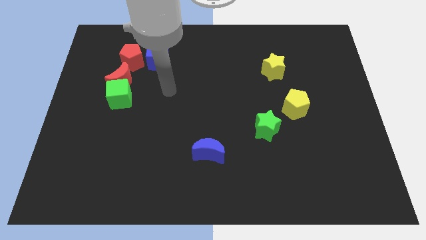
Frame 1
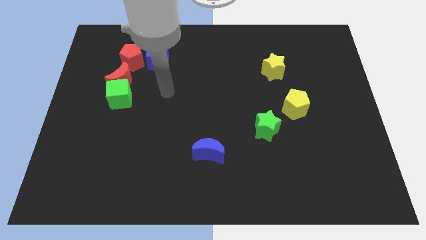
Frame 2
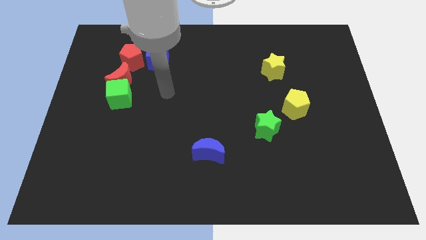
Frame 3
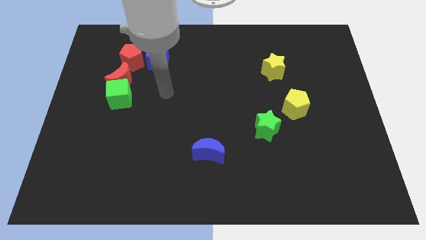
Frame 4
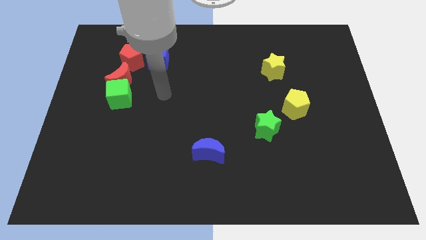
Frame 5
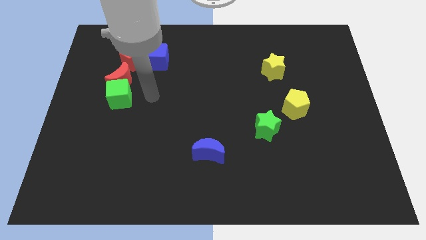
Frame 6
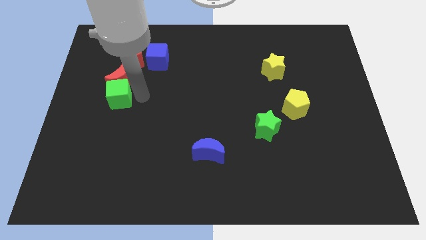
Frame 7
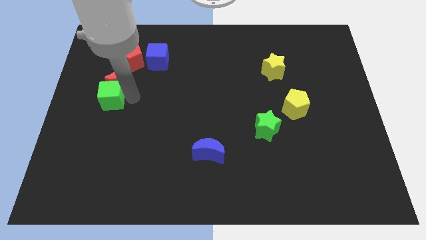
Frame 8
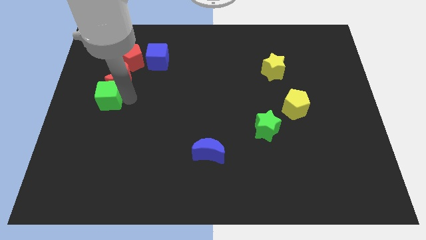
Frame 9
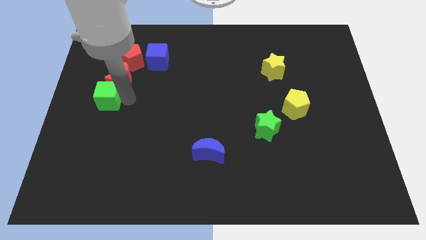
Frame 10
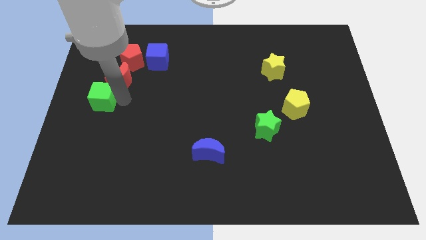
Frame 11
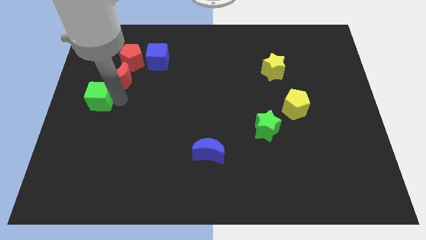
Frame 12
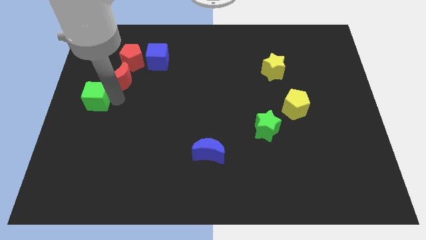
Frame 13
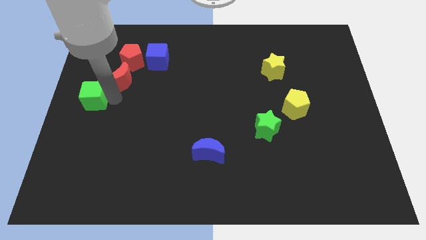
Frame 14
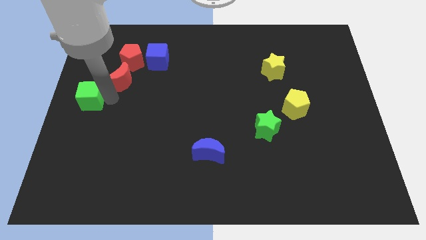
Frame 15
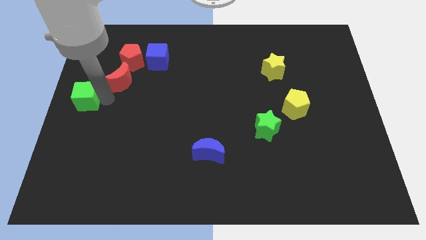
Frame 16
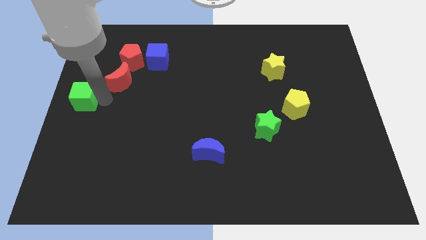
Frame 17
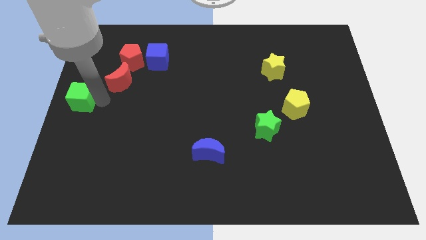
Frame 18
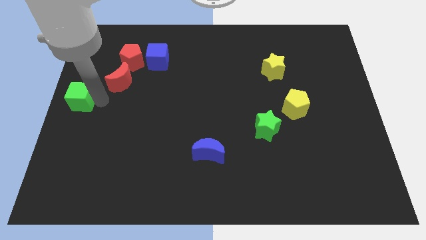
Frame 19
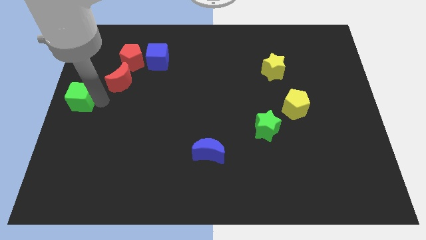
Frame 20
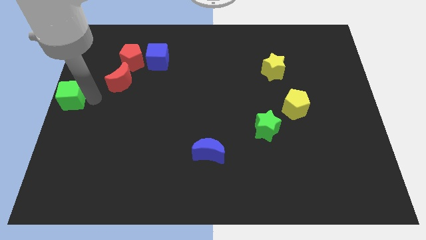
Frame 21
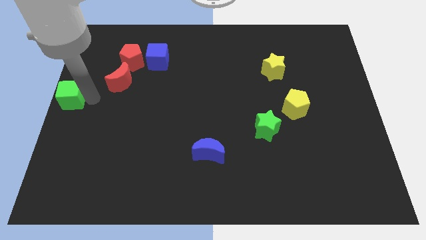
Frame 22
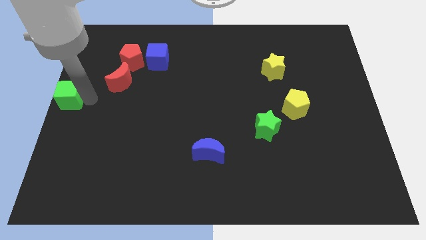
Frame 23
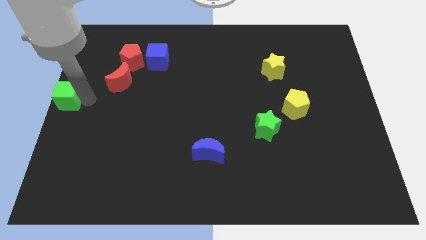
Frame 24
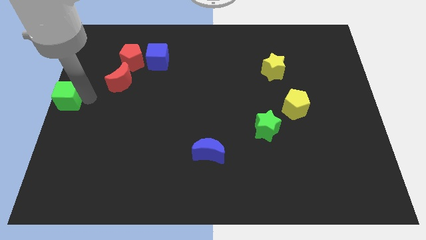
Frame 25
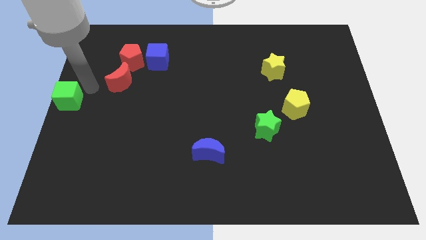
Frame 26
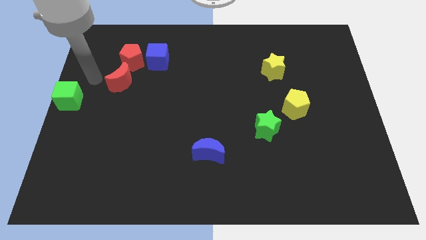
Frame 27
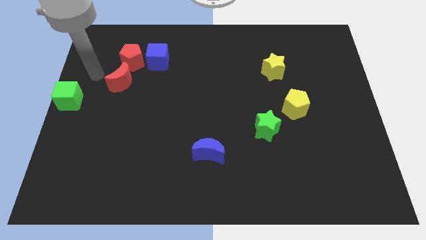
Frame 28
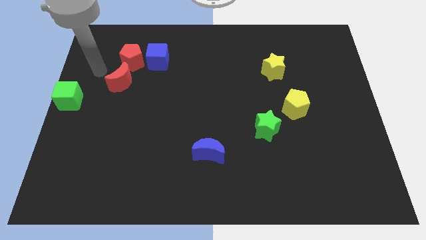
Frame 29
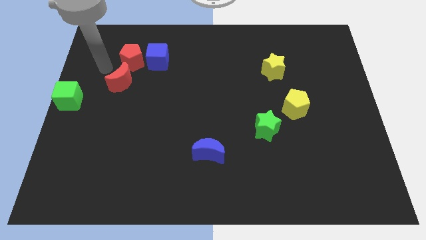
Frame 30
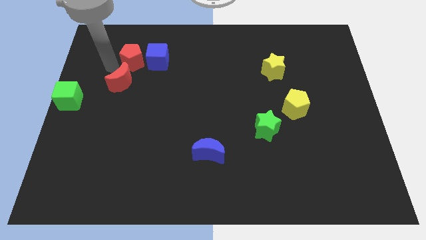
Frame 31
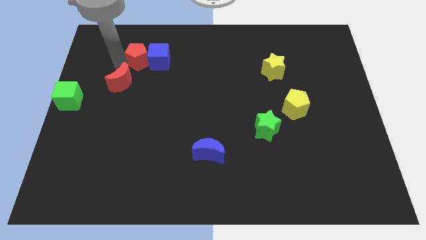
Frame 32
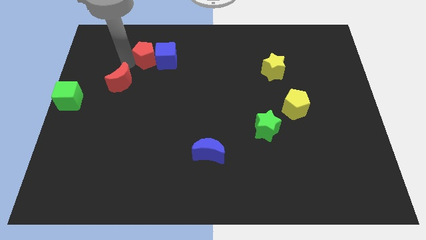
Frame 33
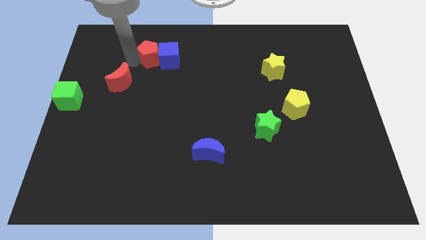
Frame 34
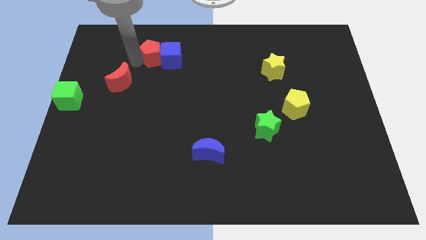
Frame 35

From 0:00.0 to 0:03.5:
move the green cube to the left middle of the board

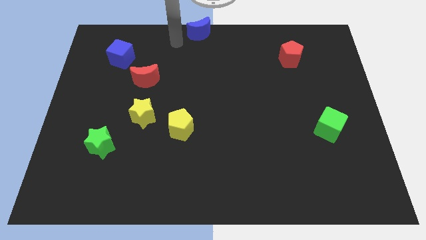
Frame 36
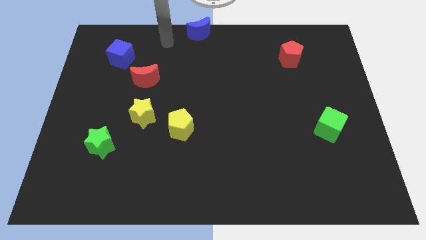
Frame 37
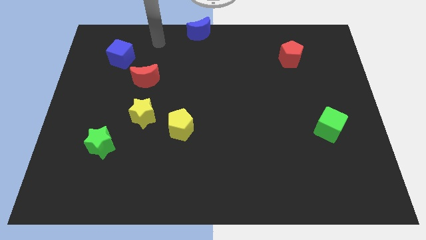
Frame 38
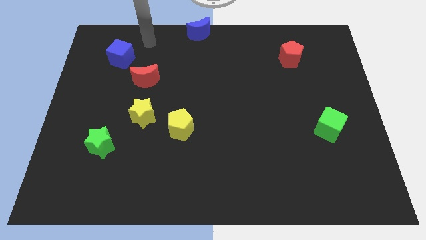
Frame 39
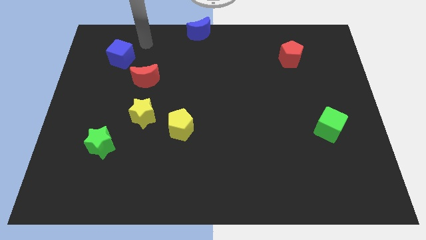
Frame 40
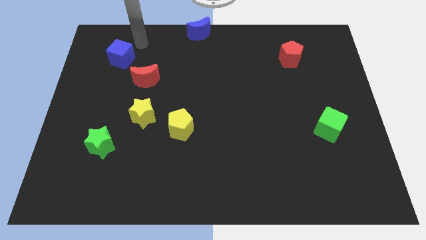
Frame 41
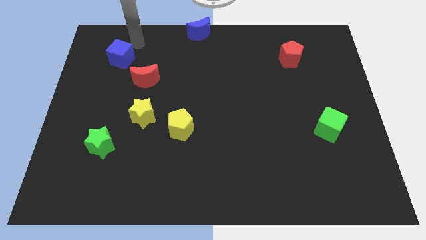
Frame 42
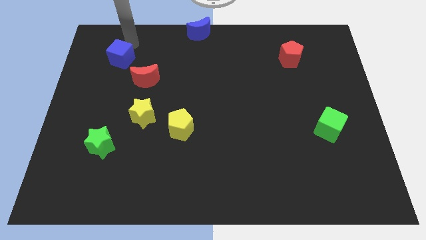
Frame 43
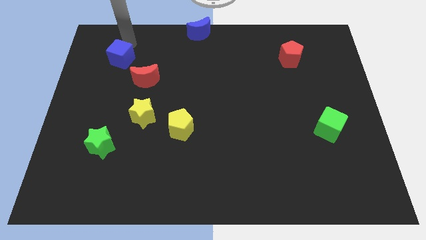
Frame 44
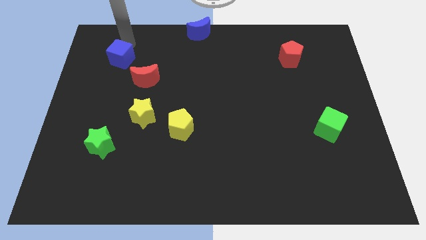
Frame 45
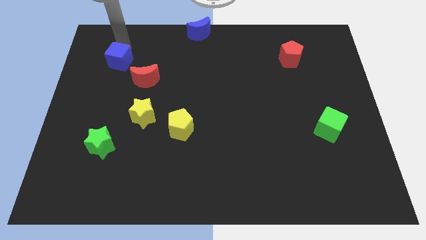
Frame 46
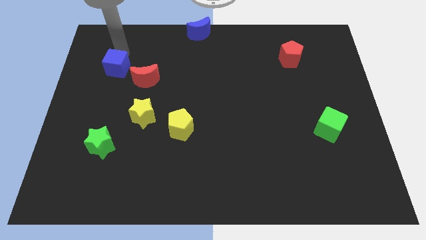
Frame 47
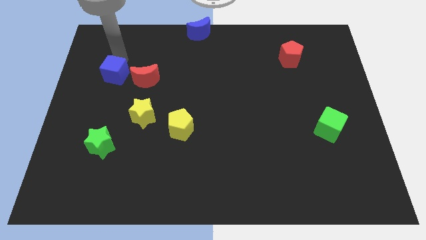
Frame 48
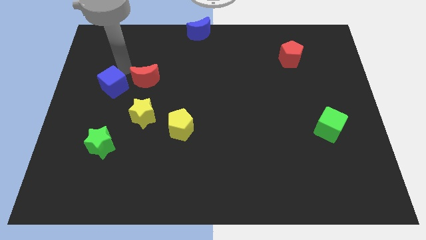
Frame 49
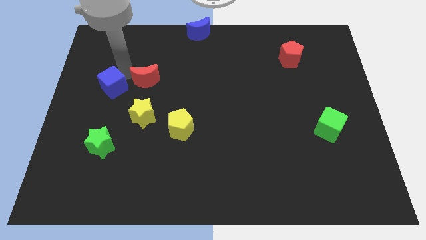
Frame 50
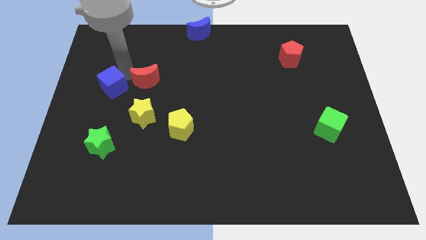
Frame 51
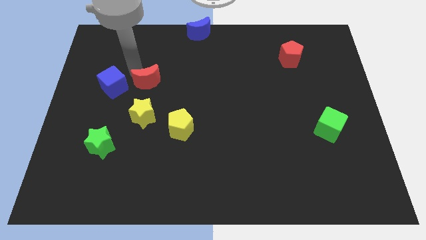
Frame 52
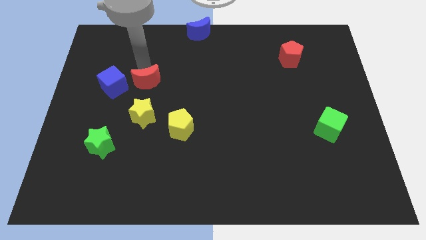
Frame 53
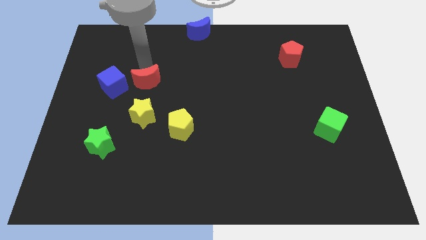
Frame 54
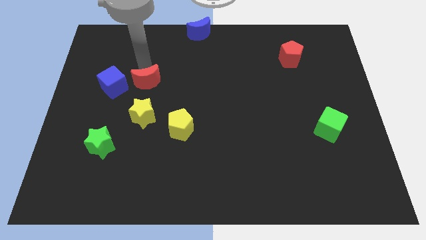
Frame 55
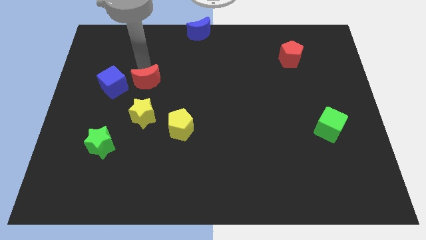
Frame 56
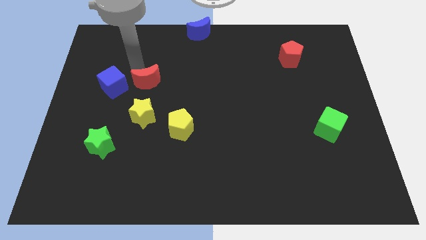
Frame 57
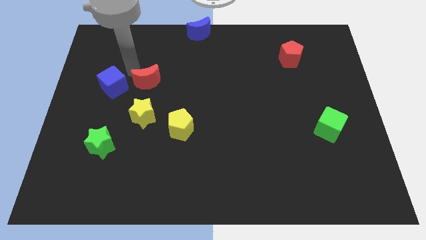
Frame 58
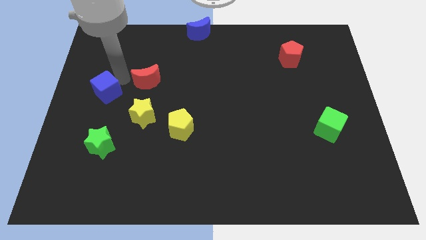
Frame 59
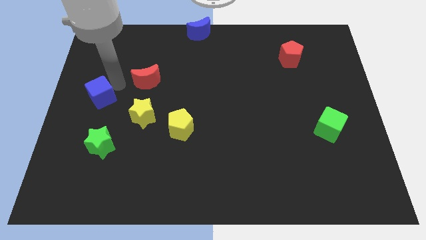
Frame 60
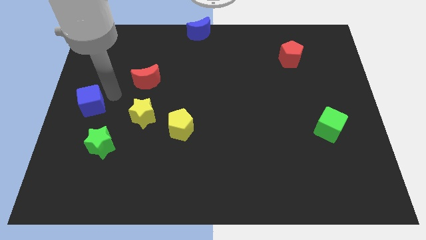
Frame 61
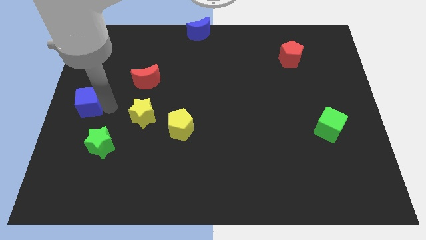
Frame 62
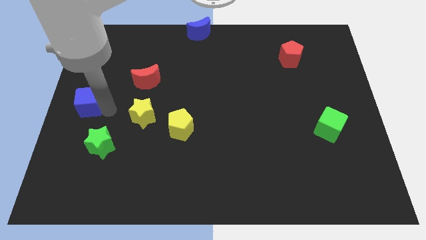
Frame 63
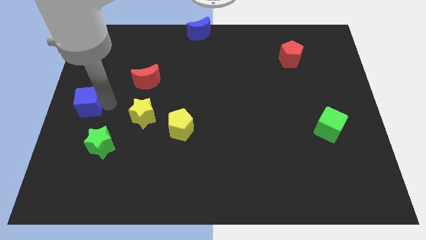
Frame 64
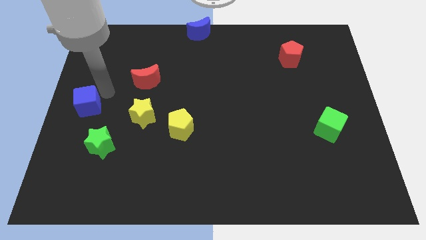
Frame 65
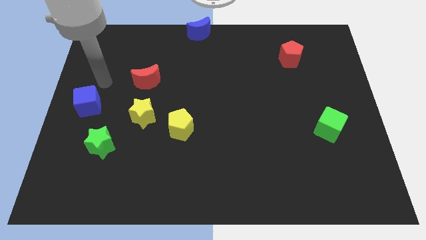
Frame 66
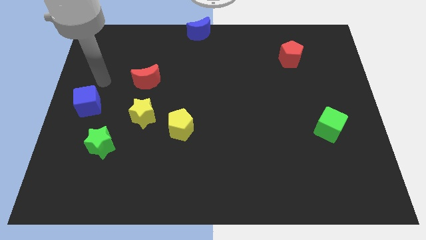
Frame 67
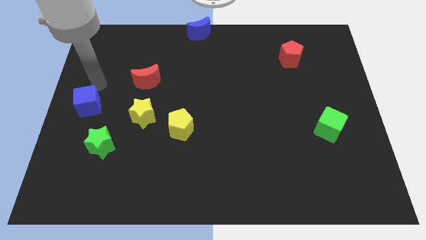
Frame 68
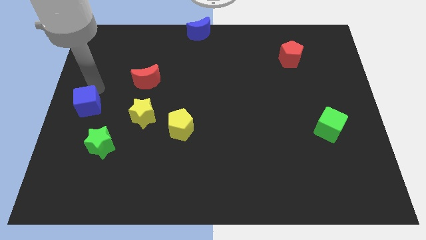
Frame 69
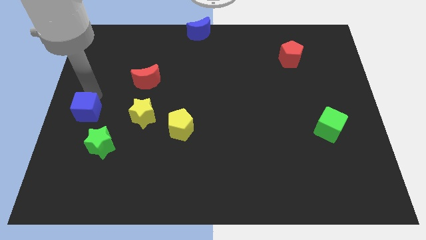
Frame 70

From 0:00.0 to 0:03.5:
move the blue cube to the top of the green star

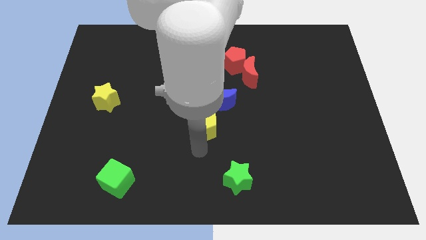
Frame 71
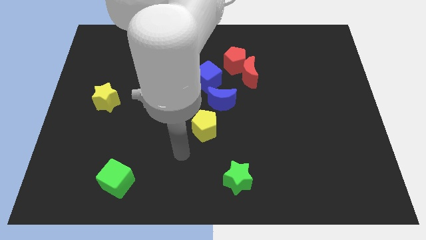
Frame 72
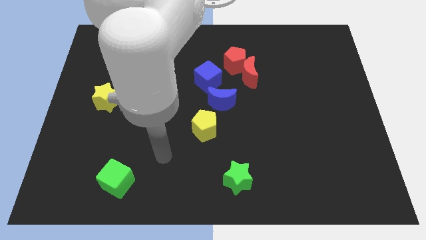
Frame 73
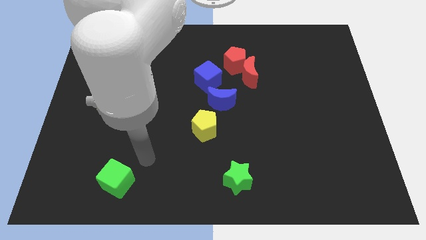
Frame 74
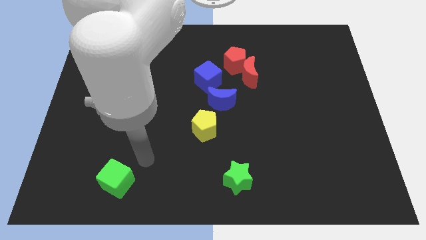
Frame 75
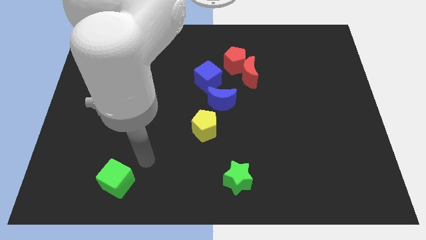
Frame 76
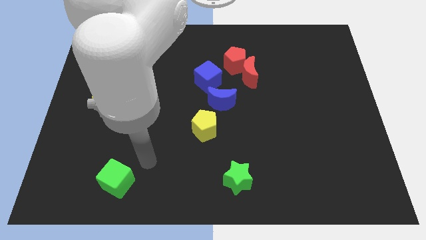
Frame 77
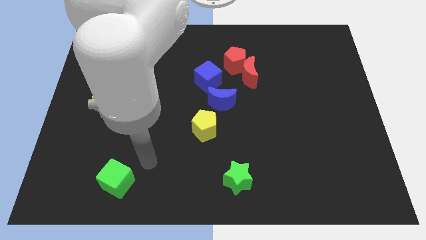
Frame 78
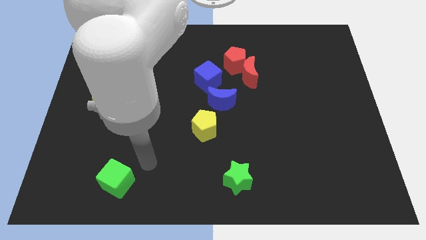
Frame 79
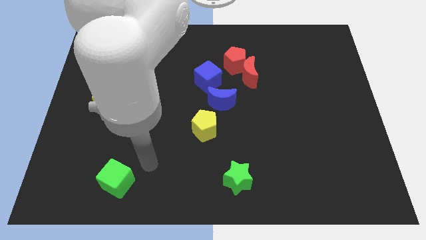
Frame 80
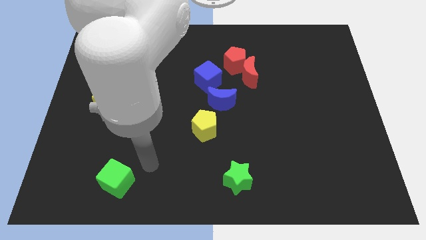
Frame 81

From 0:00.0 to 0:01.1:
move your arm away from yellow pentagon

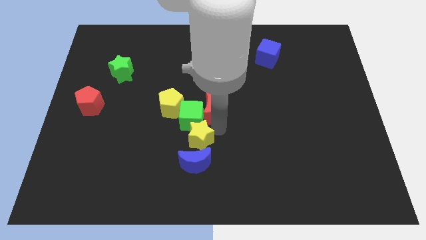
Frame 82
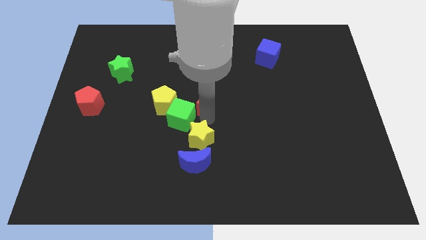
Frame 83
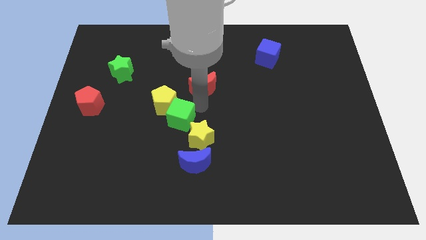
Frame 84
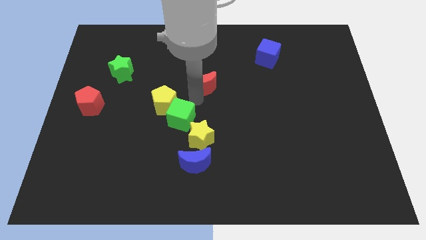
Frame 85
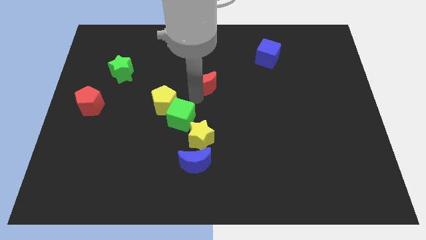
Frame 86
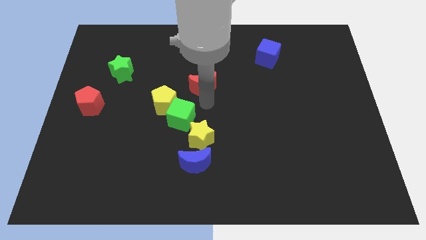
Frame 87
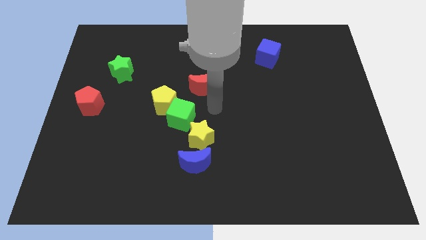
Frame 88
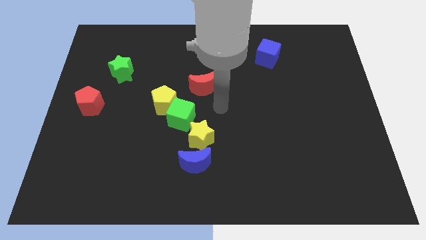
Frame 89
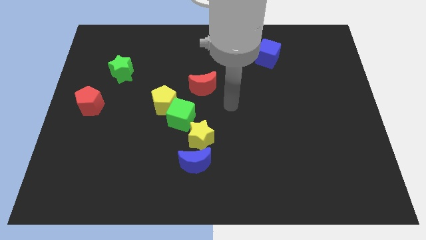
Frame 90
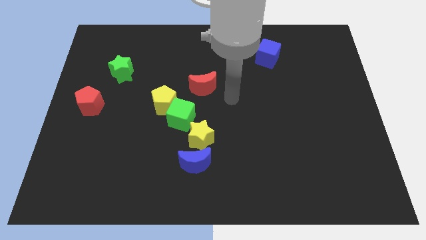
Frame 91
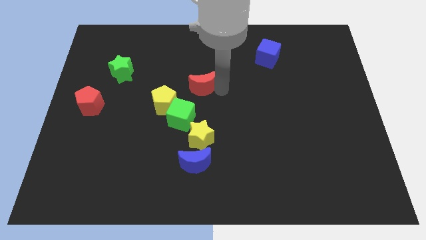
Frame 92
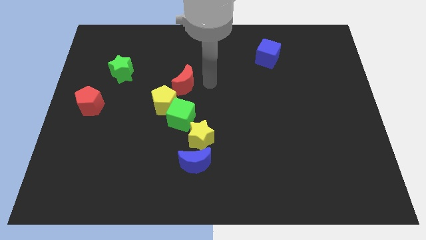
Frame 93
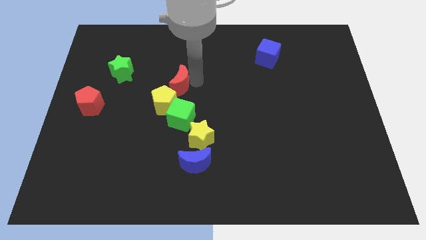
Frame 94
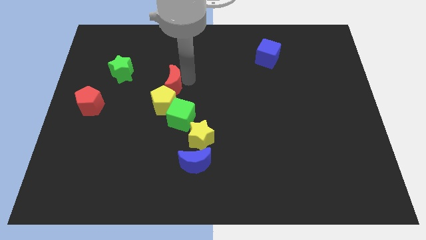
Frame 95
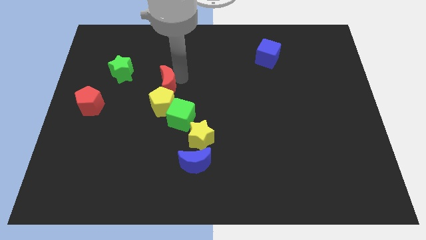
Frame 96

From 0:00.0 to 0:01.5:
move the red moon into the yellow pentagon
